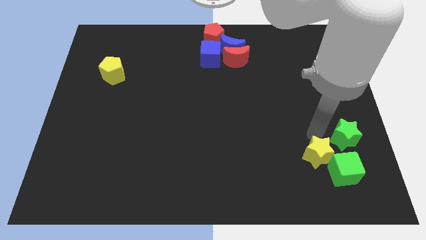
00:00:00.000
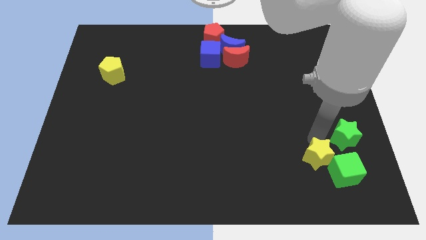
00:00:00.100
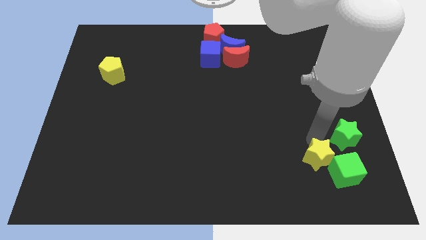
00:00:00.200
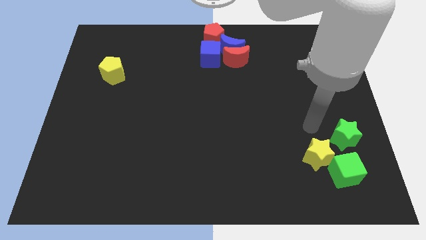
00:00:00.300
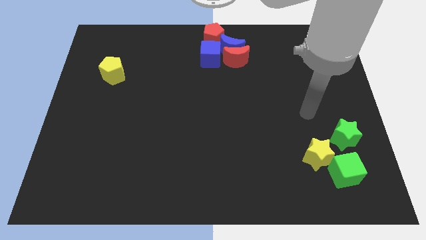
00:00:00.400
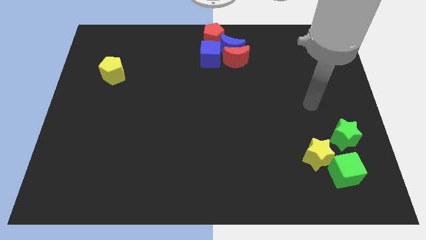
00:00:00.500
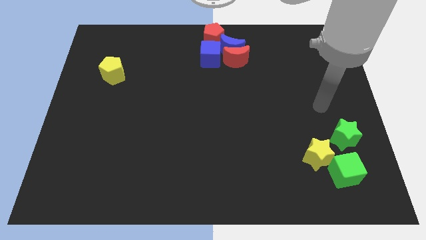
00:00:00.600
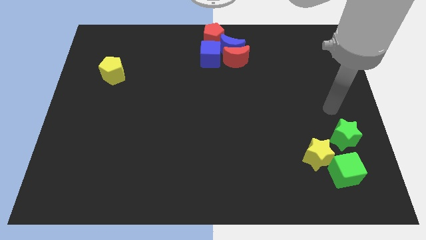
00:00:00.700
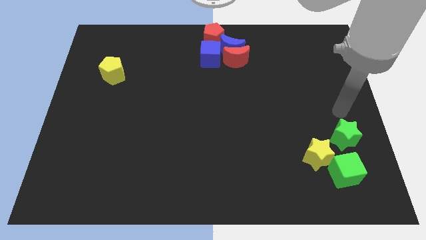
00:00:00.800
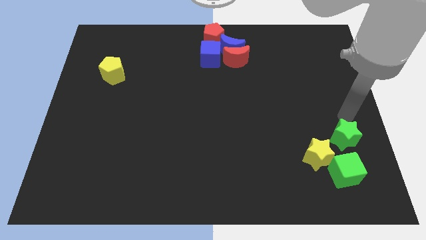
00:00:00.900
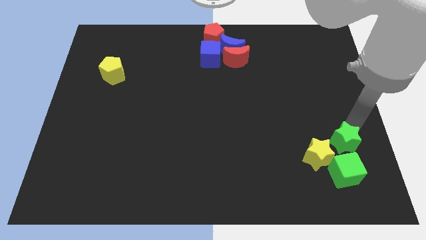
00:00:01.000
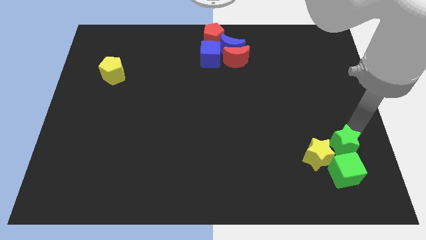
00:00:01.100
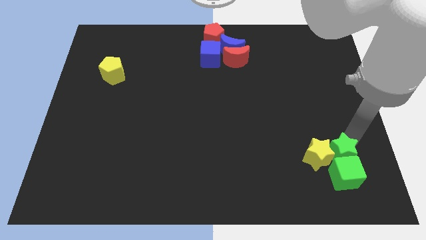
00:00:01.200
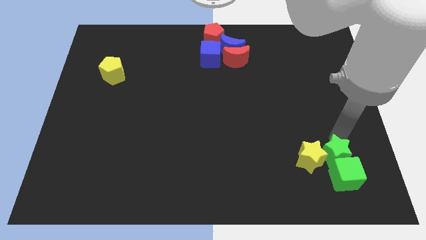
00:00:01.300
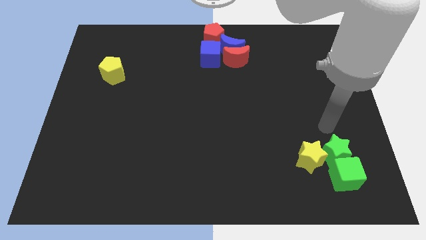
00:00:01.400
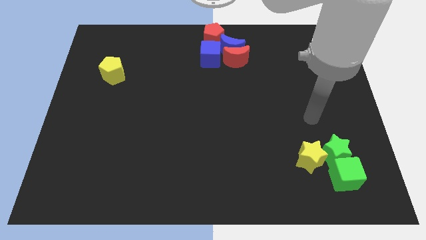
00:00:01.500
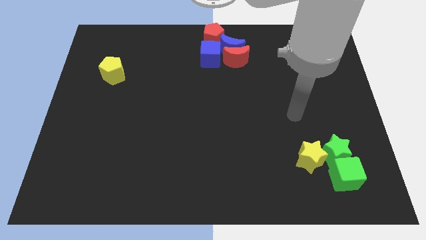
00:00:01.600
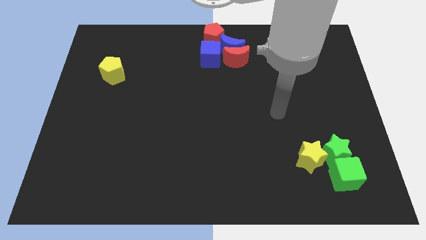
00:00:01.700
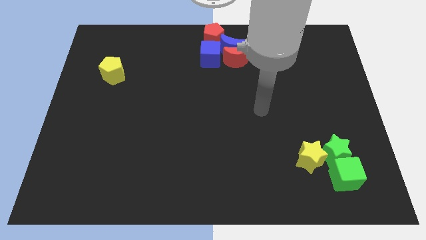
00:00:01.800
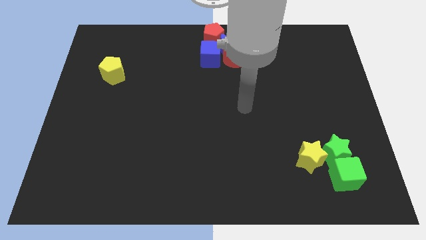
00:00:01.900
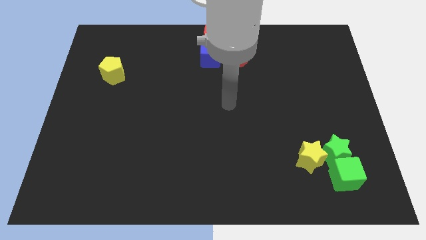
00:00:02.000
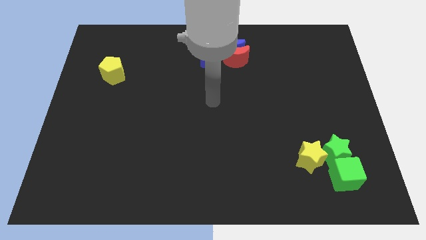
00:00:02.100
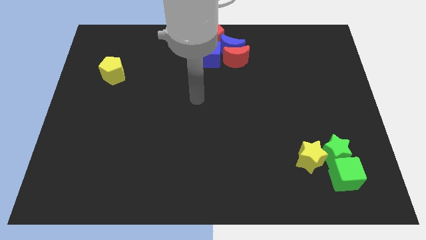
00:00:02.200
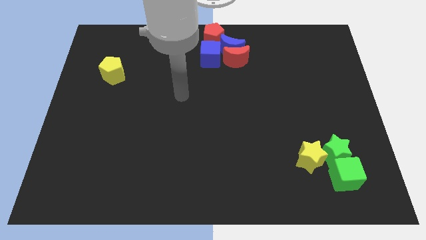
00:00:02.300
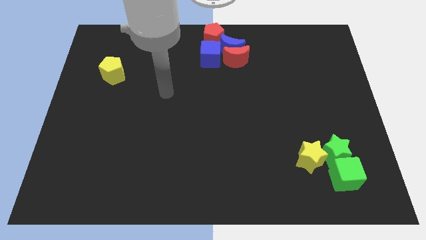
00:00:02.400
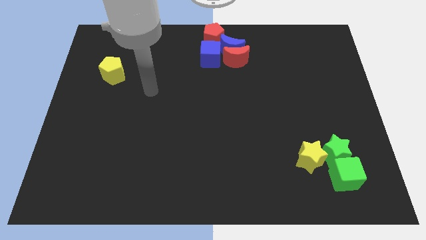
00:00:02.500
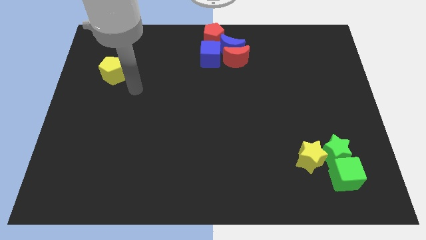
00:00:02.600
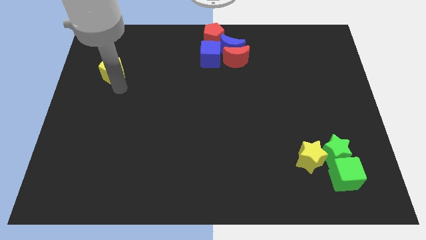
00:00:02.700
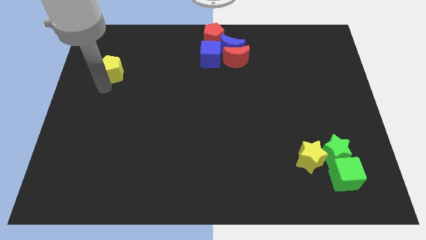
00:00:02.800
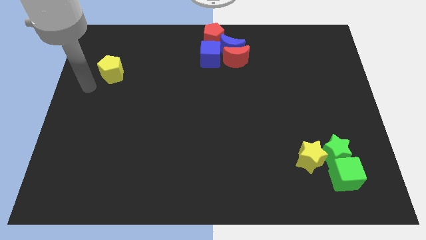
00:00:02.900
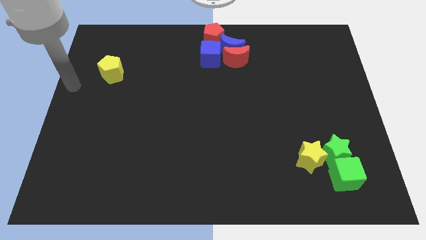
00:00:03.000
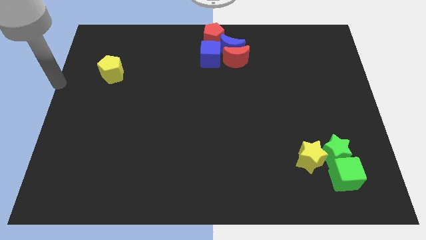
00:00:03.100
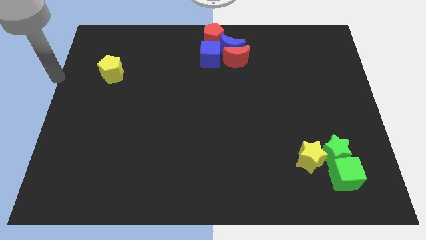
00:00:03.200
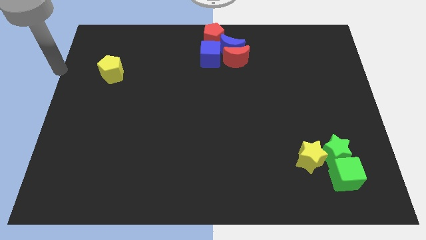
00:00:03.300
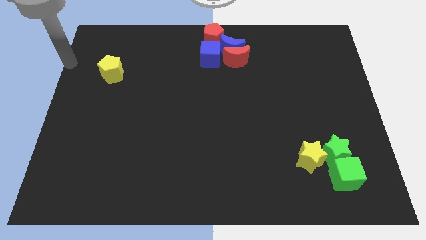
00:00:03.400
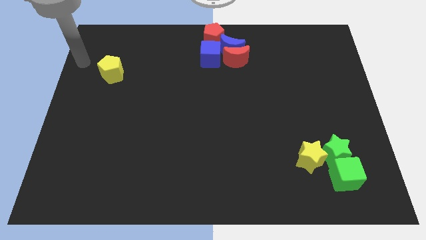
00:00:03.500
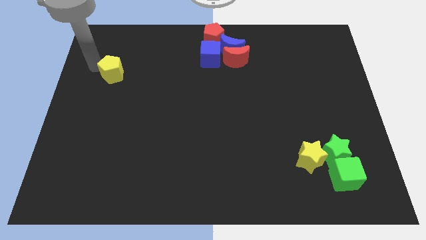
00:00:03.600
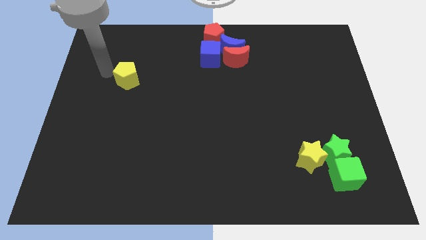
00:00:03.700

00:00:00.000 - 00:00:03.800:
move your arm to the top left side of the yellow pentagon

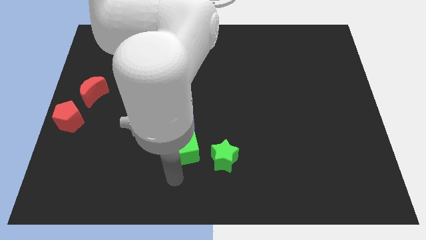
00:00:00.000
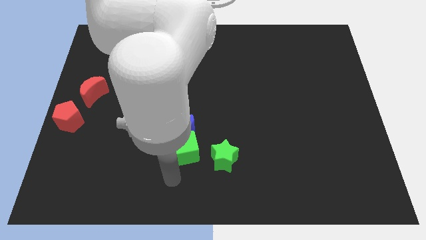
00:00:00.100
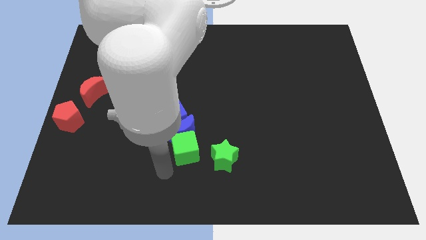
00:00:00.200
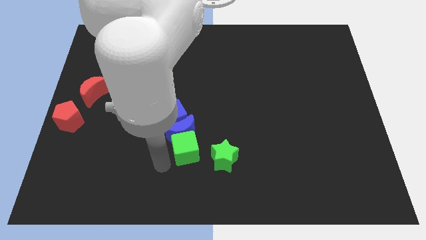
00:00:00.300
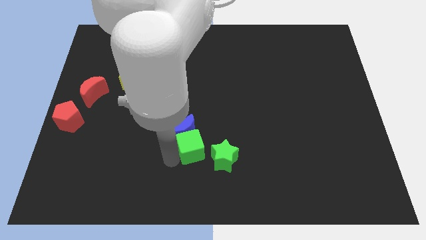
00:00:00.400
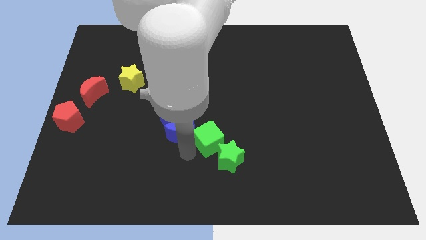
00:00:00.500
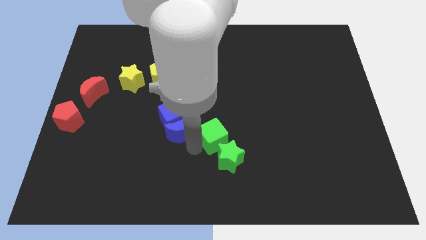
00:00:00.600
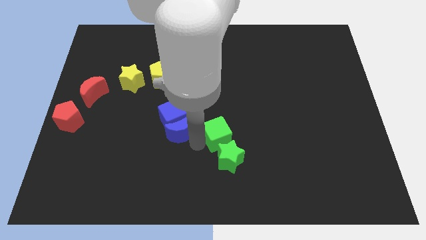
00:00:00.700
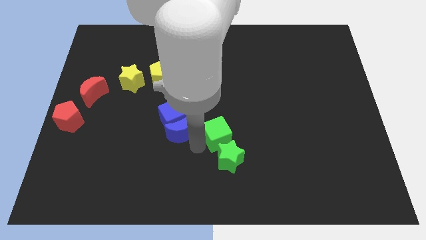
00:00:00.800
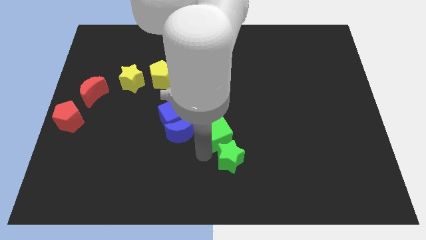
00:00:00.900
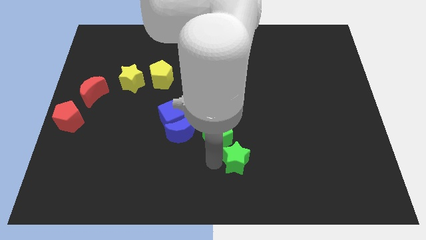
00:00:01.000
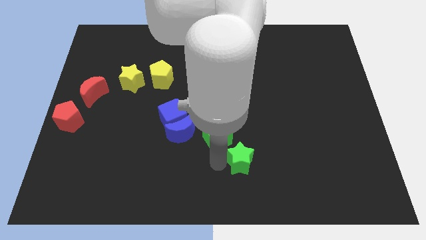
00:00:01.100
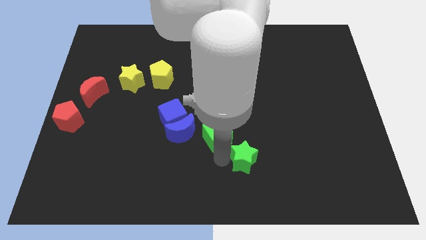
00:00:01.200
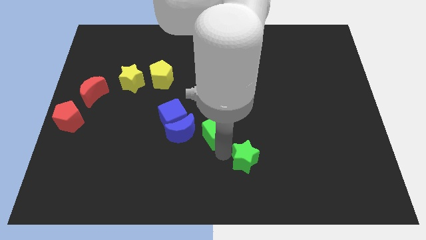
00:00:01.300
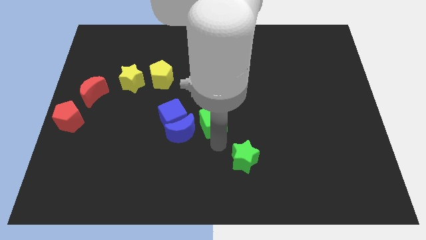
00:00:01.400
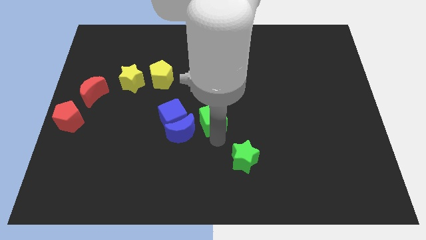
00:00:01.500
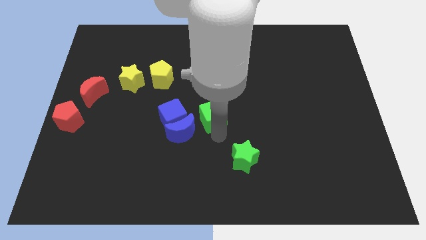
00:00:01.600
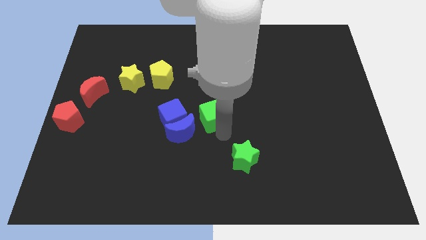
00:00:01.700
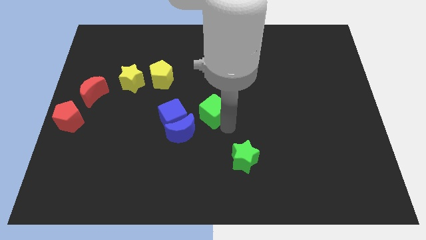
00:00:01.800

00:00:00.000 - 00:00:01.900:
put the green cube right to the blue moon

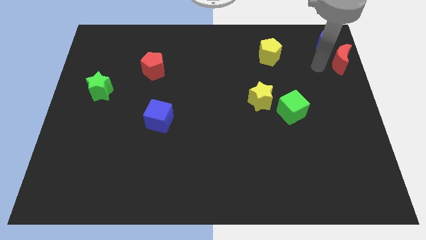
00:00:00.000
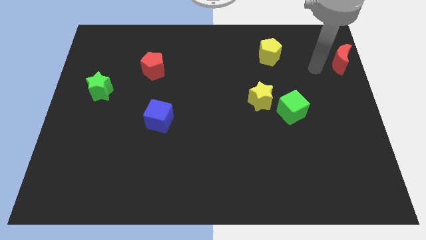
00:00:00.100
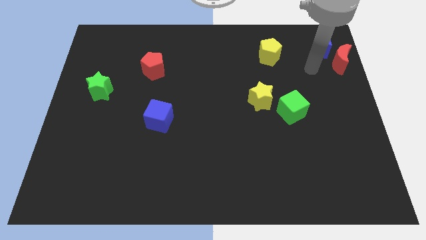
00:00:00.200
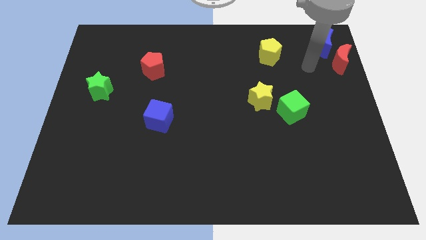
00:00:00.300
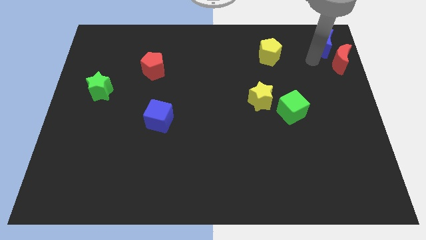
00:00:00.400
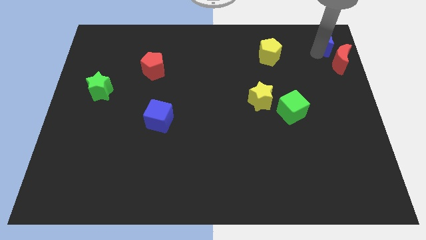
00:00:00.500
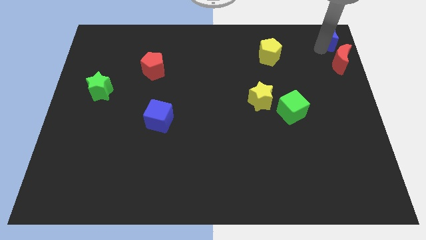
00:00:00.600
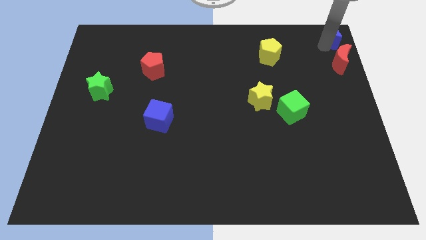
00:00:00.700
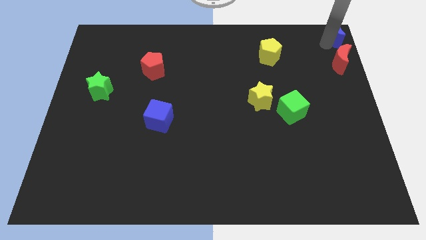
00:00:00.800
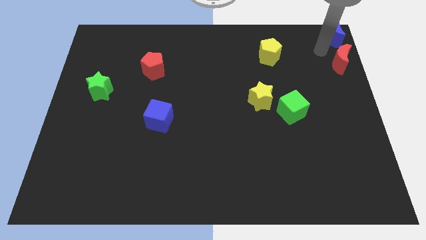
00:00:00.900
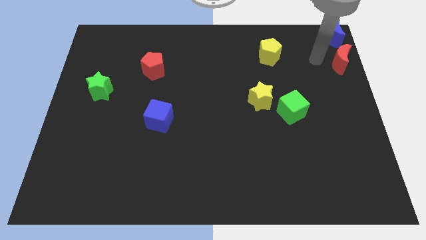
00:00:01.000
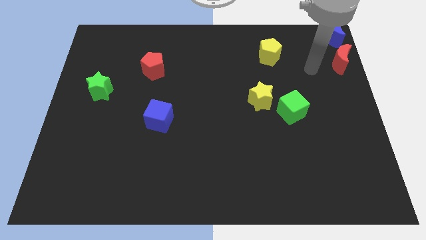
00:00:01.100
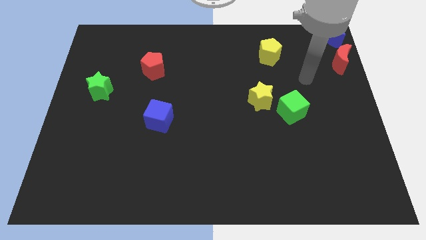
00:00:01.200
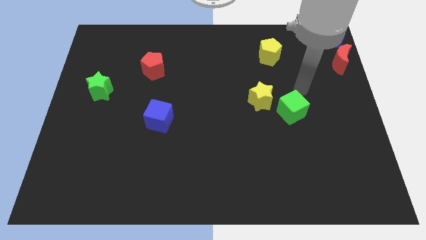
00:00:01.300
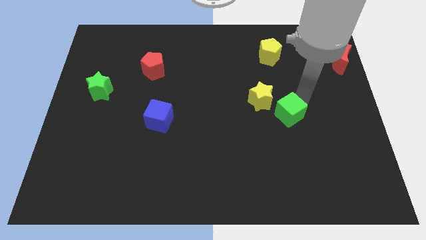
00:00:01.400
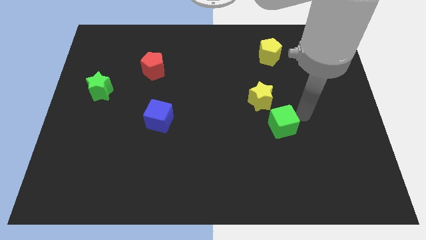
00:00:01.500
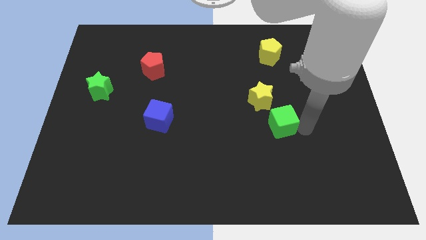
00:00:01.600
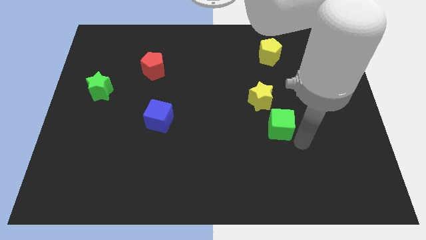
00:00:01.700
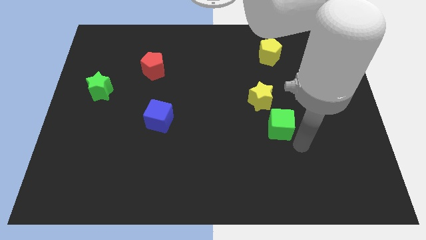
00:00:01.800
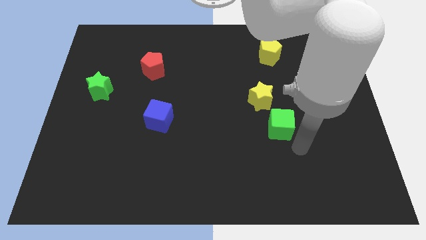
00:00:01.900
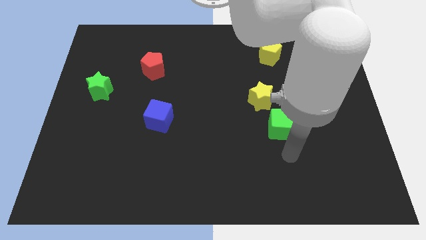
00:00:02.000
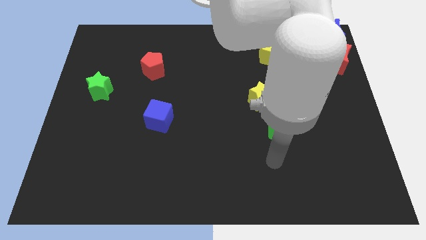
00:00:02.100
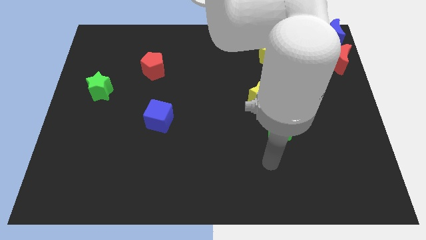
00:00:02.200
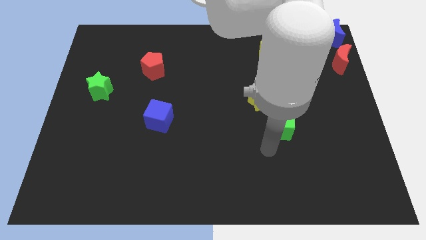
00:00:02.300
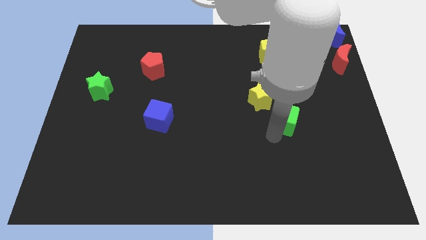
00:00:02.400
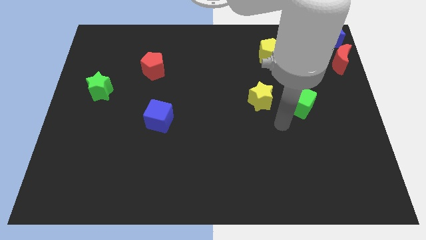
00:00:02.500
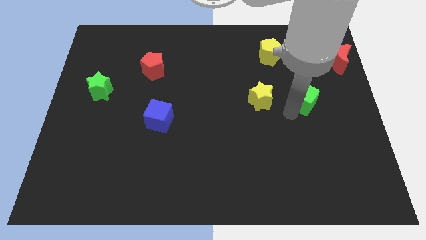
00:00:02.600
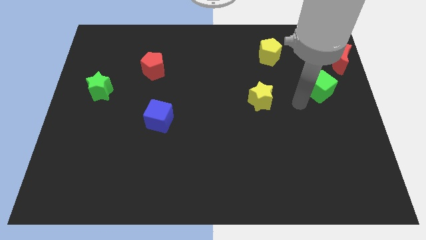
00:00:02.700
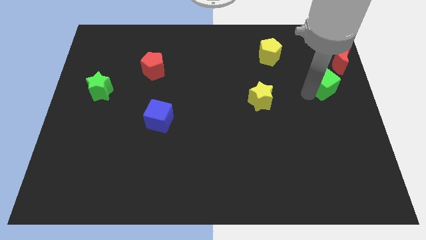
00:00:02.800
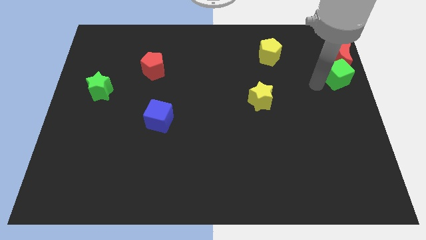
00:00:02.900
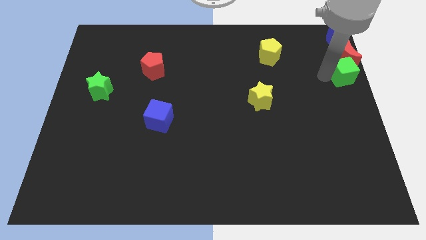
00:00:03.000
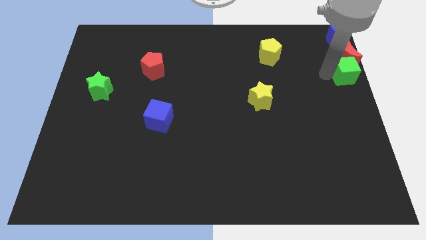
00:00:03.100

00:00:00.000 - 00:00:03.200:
put the green cube into the red moon

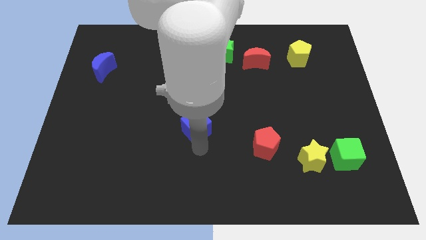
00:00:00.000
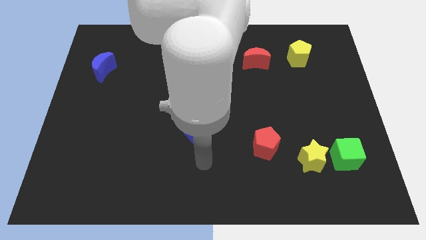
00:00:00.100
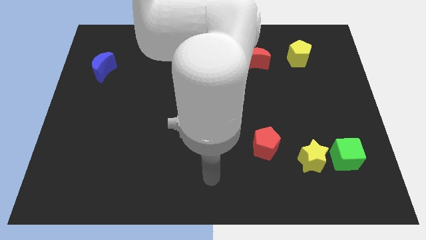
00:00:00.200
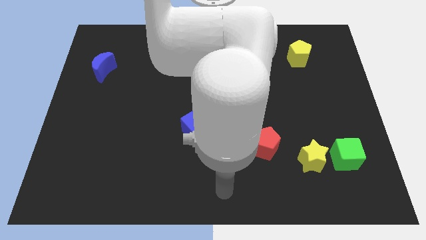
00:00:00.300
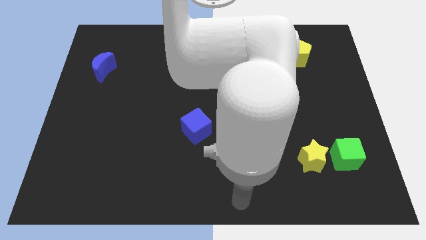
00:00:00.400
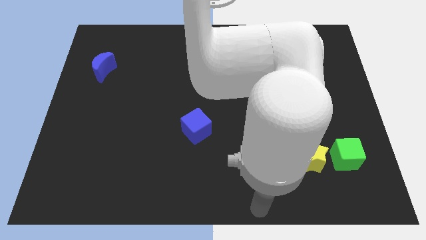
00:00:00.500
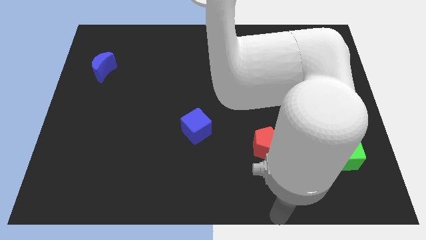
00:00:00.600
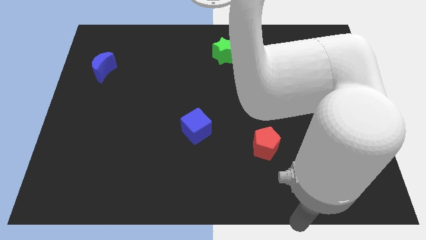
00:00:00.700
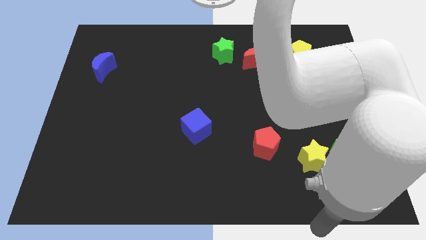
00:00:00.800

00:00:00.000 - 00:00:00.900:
move your arm away from blue cube
